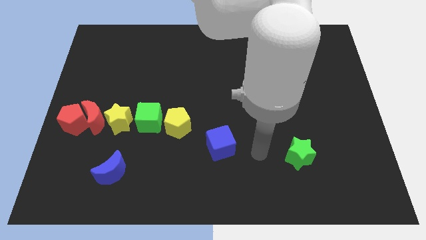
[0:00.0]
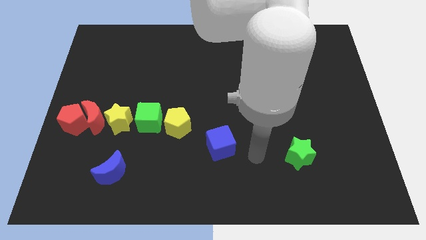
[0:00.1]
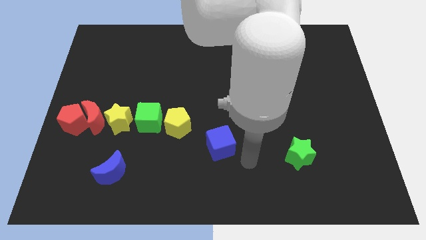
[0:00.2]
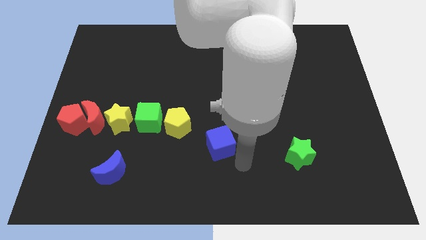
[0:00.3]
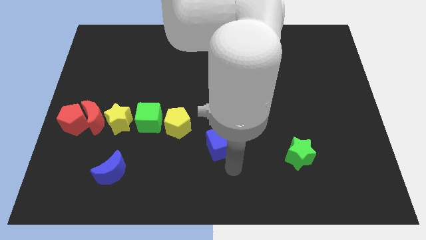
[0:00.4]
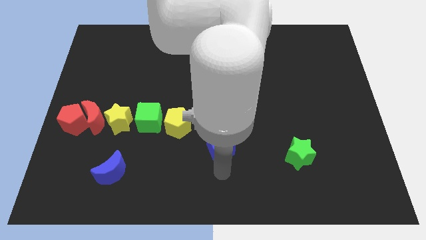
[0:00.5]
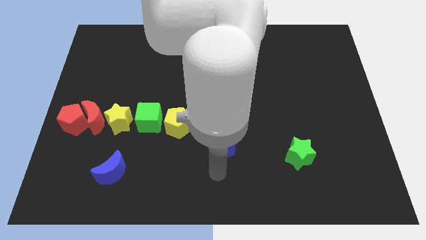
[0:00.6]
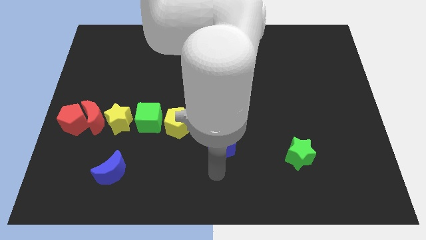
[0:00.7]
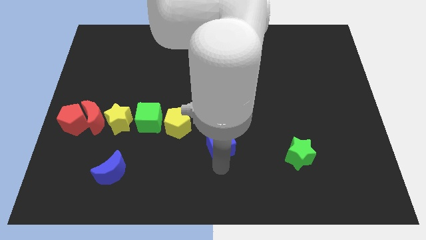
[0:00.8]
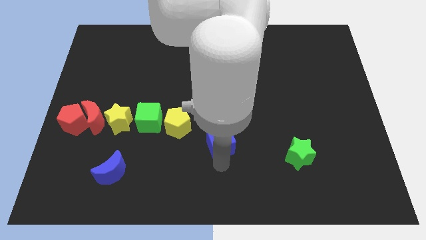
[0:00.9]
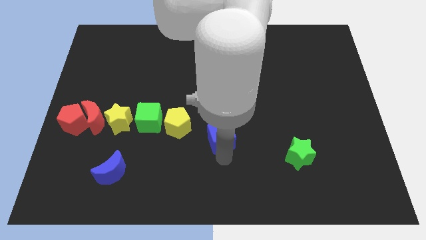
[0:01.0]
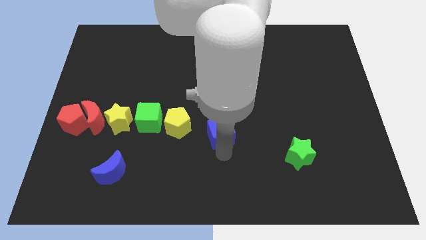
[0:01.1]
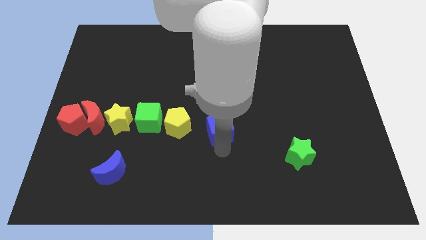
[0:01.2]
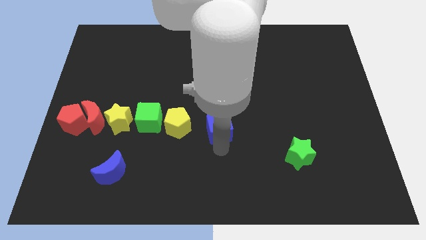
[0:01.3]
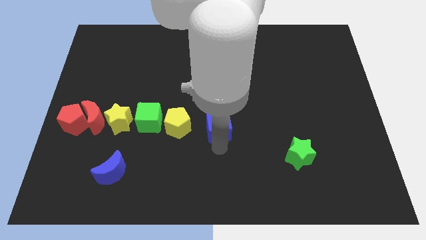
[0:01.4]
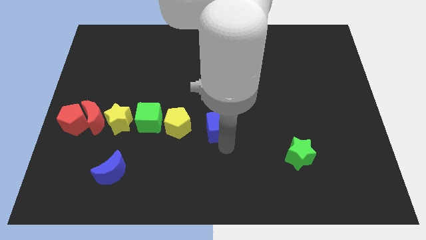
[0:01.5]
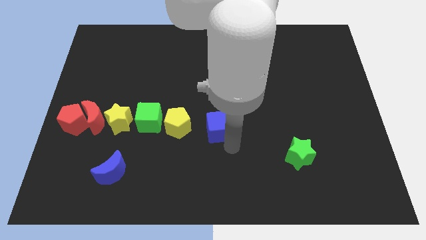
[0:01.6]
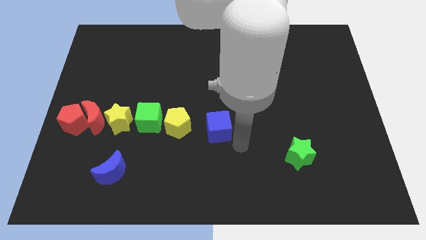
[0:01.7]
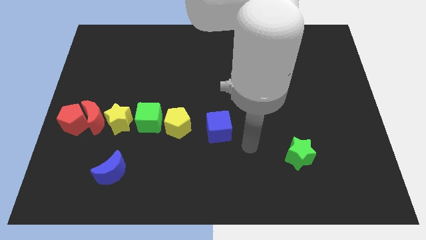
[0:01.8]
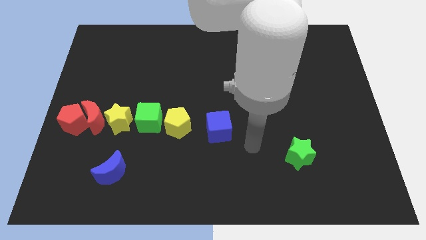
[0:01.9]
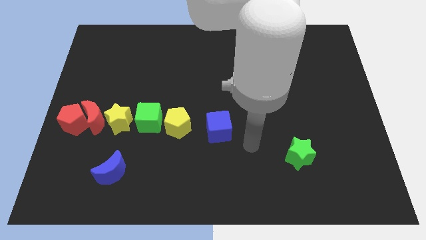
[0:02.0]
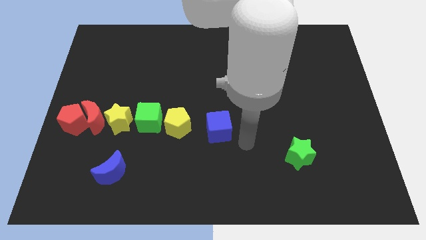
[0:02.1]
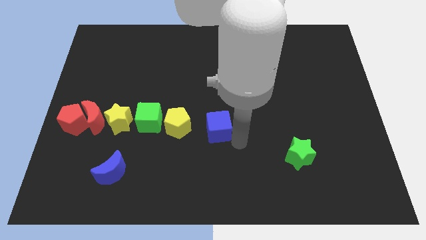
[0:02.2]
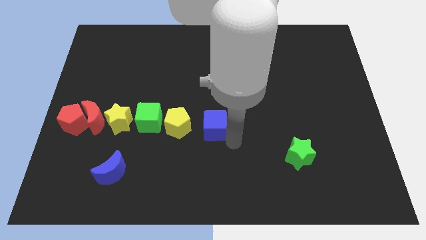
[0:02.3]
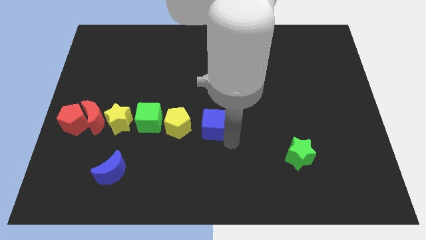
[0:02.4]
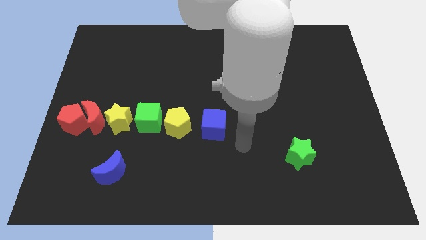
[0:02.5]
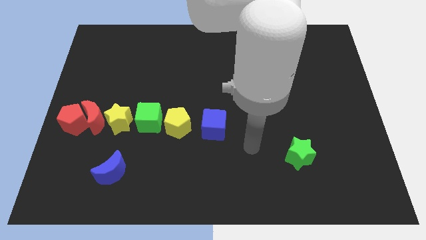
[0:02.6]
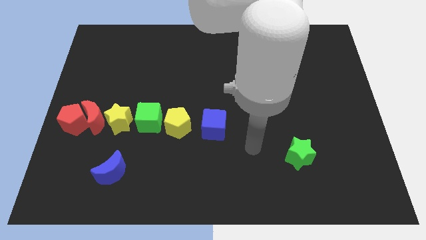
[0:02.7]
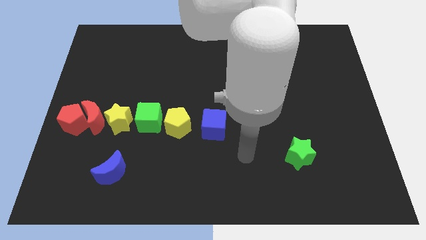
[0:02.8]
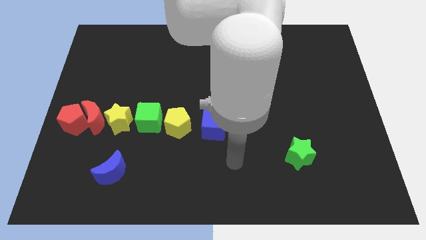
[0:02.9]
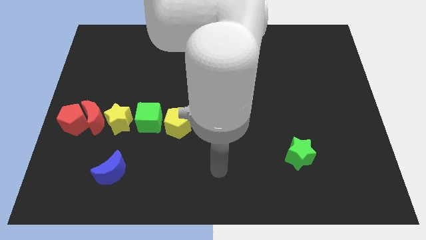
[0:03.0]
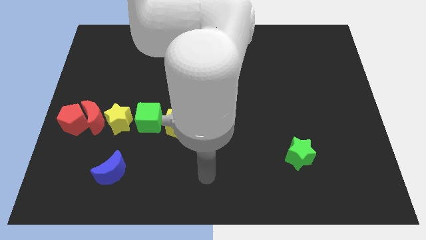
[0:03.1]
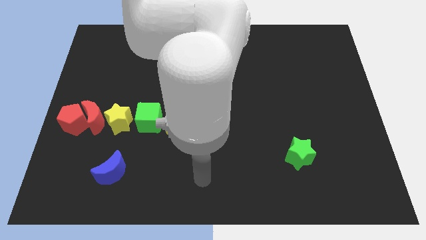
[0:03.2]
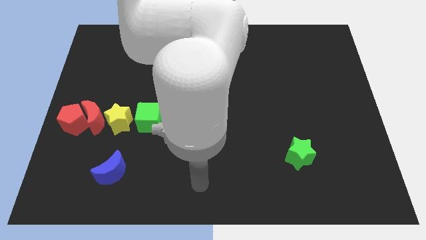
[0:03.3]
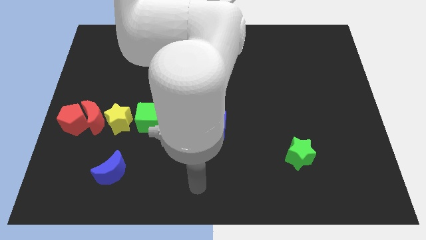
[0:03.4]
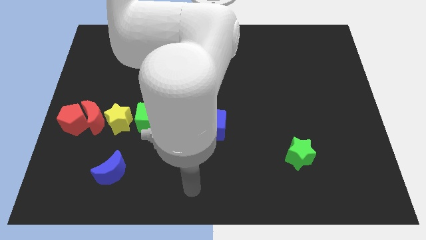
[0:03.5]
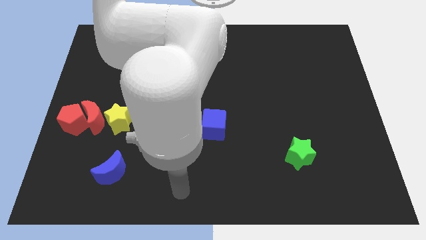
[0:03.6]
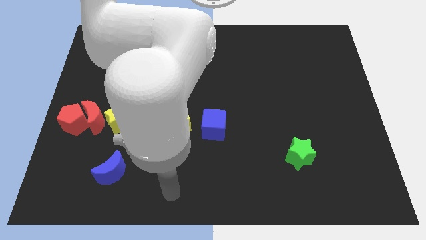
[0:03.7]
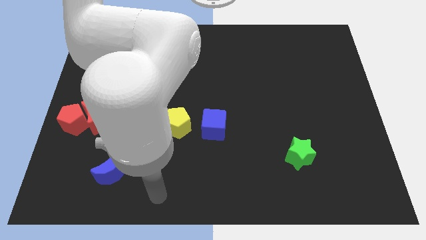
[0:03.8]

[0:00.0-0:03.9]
slide the blue cube to the right side of the yellow pentagon

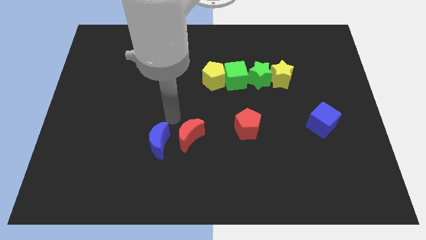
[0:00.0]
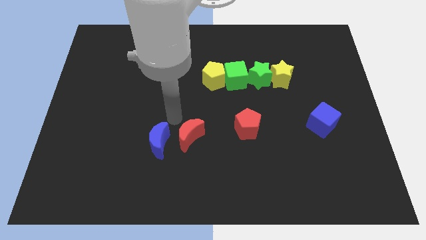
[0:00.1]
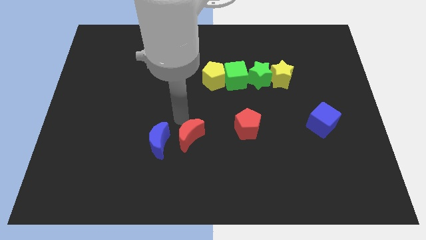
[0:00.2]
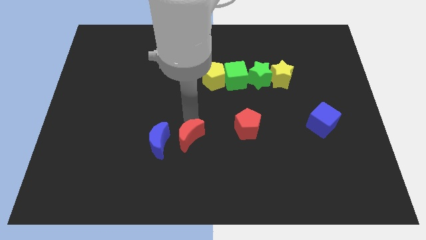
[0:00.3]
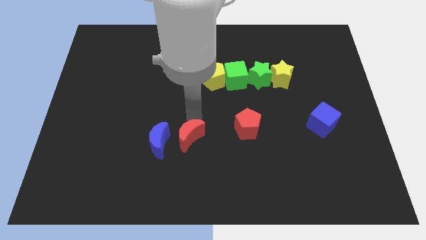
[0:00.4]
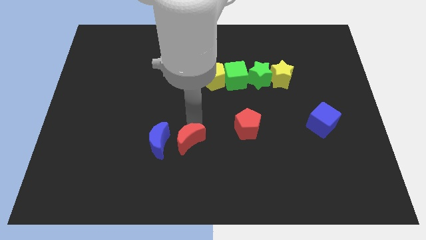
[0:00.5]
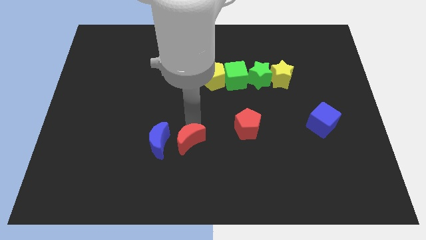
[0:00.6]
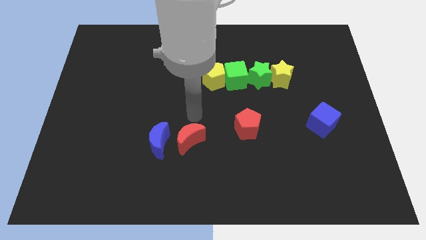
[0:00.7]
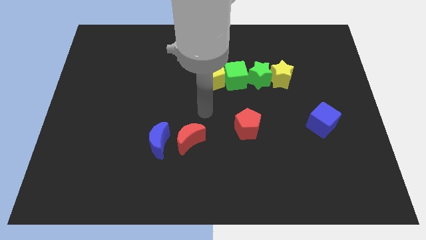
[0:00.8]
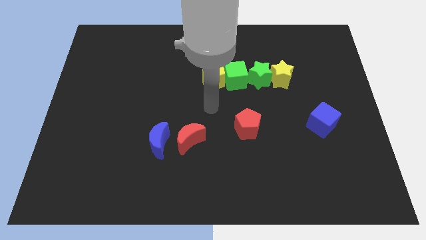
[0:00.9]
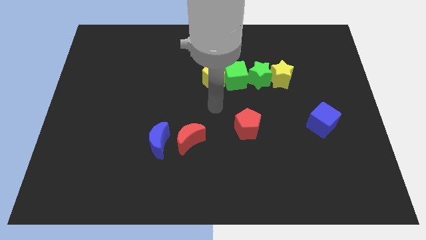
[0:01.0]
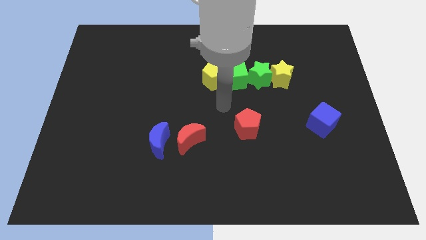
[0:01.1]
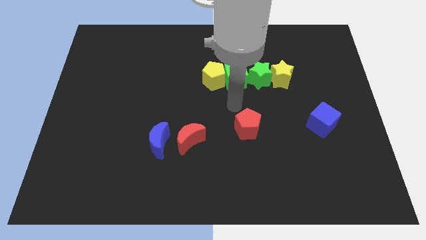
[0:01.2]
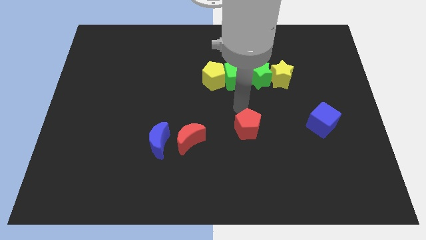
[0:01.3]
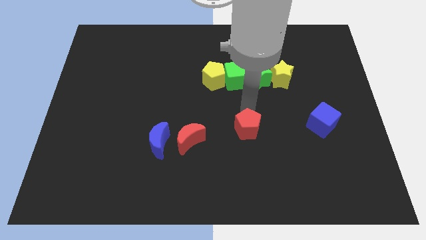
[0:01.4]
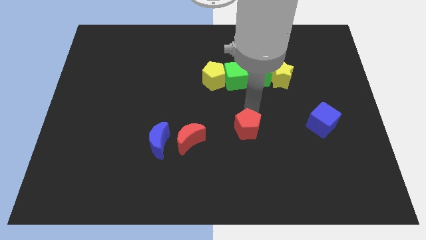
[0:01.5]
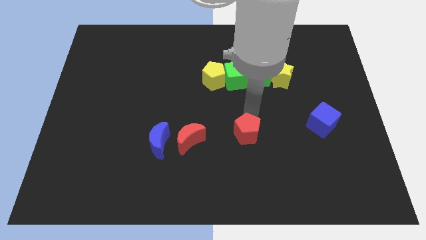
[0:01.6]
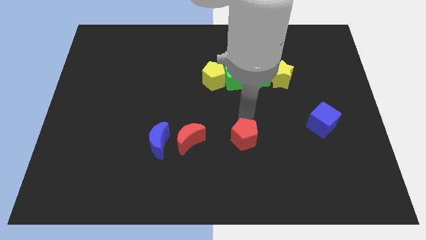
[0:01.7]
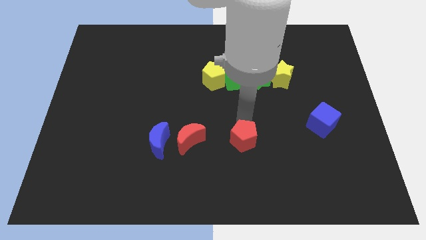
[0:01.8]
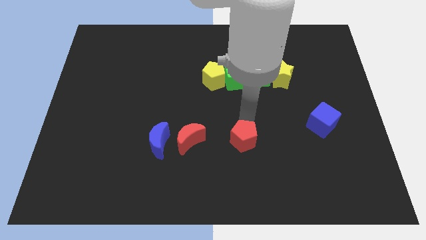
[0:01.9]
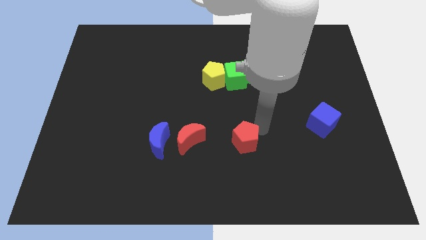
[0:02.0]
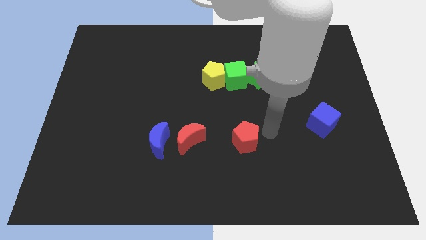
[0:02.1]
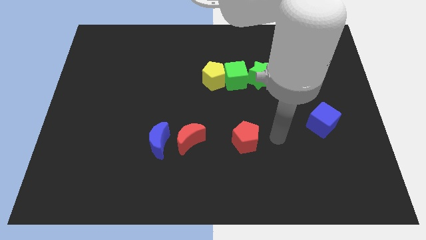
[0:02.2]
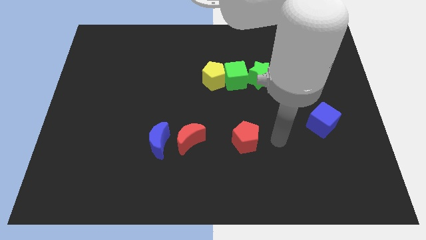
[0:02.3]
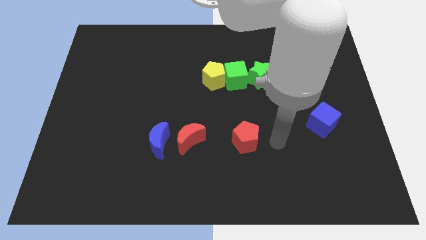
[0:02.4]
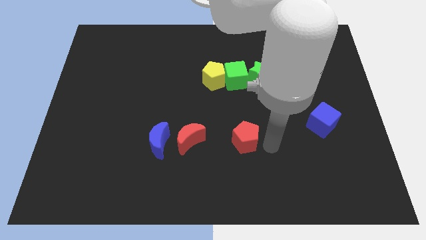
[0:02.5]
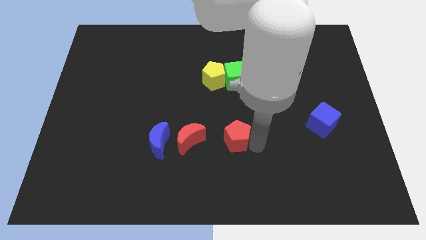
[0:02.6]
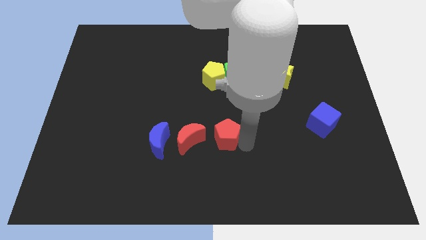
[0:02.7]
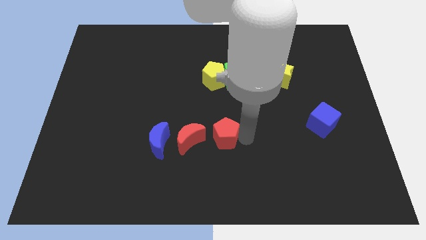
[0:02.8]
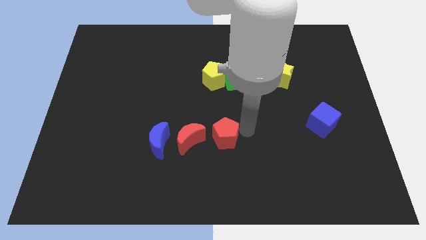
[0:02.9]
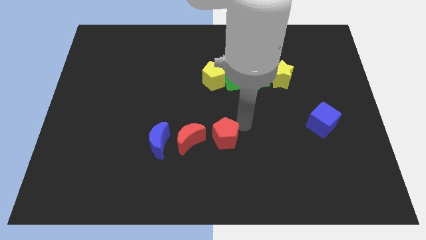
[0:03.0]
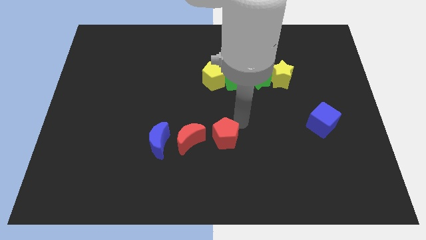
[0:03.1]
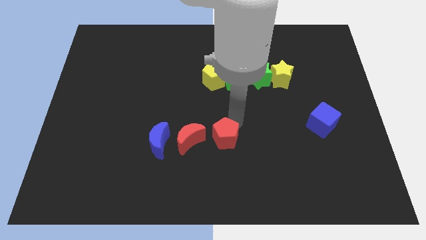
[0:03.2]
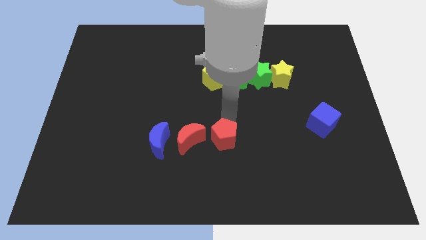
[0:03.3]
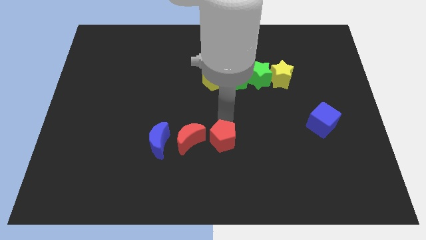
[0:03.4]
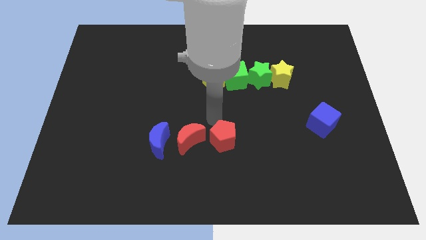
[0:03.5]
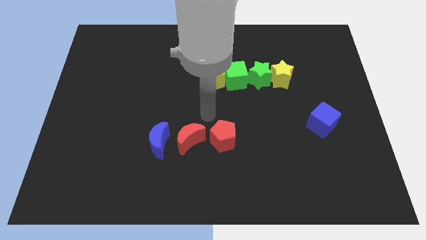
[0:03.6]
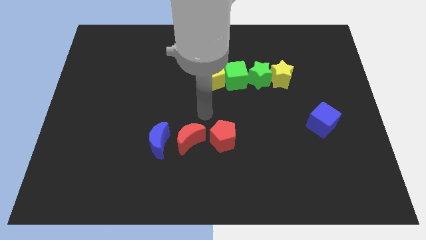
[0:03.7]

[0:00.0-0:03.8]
move the red pentagon to the right of the red crescent to form a horizontal line of blocks

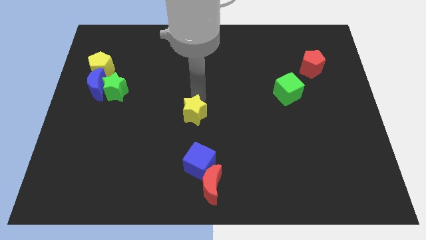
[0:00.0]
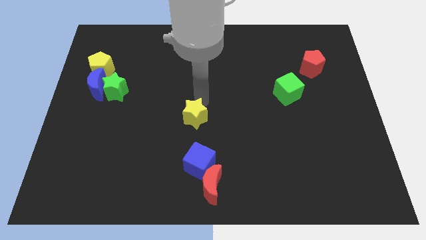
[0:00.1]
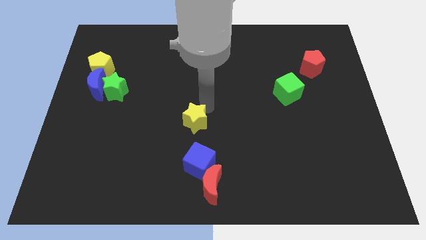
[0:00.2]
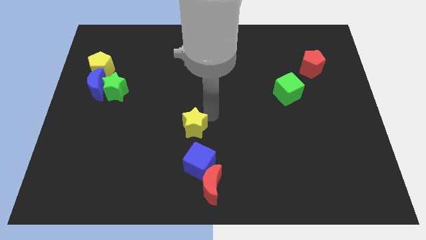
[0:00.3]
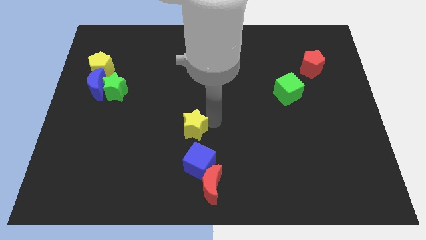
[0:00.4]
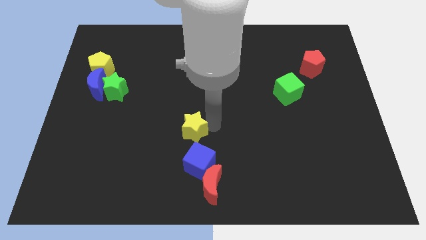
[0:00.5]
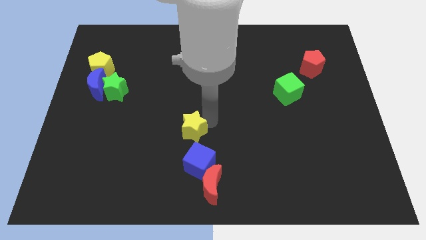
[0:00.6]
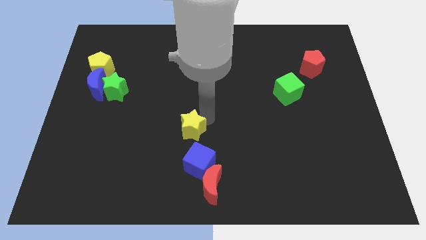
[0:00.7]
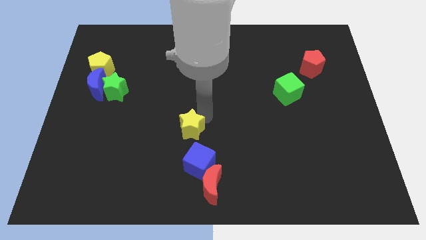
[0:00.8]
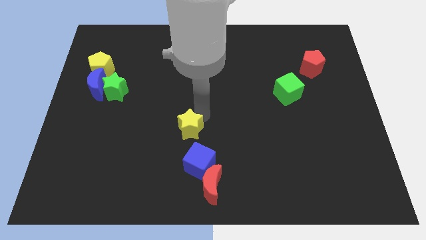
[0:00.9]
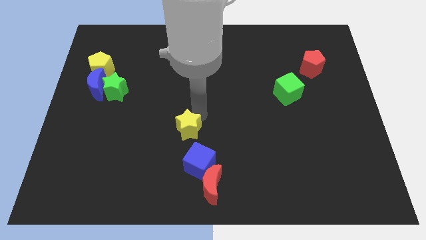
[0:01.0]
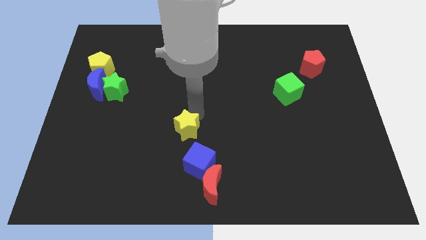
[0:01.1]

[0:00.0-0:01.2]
push yellow star downwards

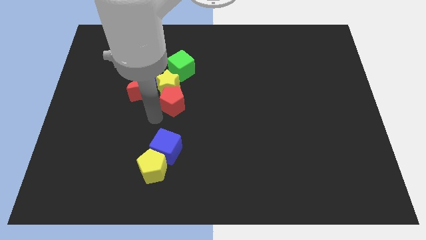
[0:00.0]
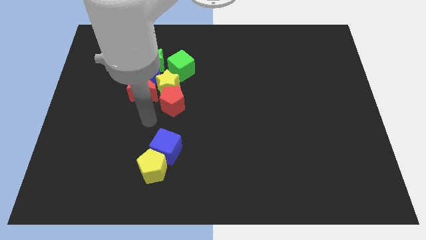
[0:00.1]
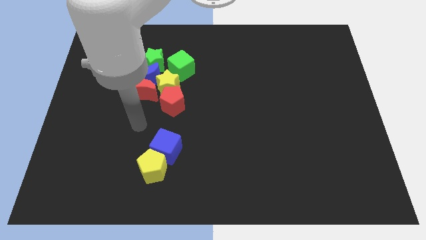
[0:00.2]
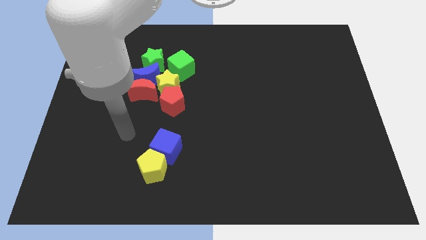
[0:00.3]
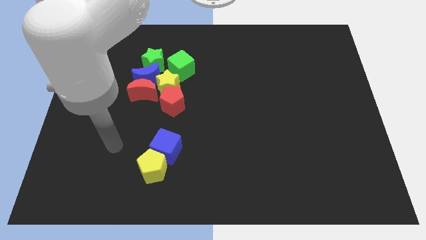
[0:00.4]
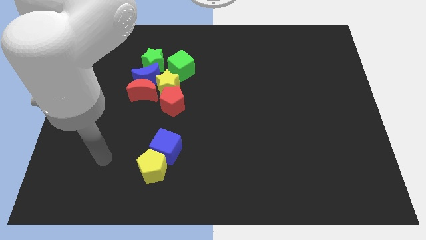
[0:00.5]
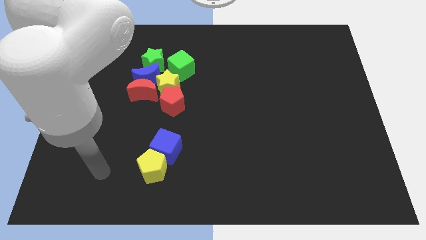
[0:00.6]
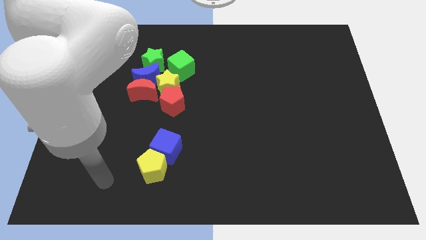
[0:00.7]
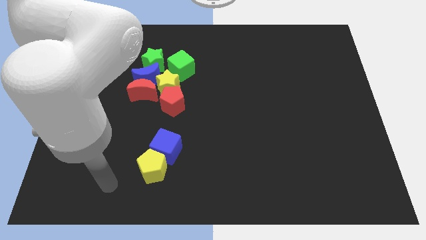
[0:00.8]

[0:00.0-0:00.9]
move the arm away from the red pentagonb
